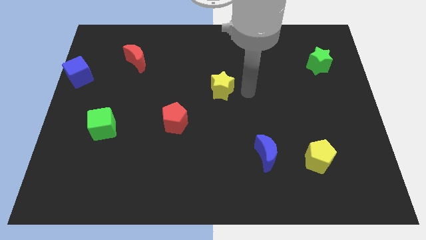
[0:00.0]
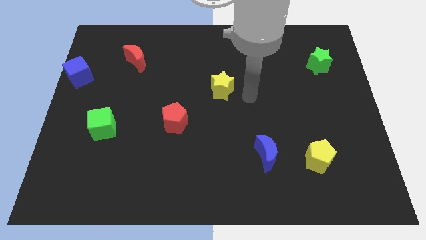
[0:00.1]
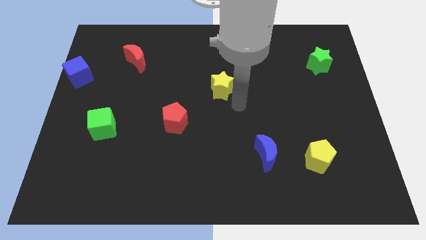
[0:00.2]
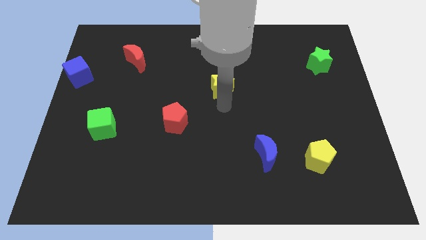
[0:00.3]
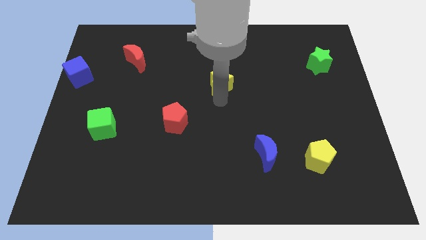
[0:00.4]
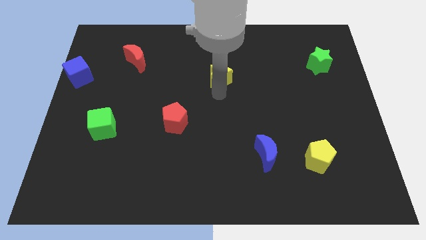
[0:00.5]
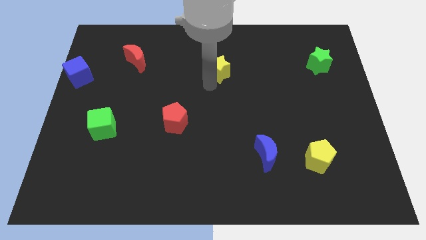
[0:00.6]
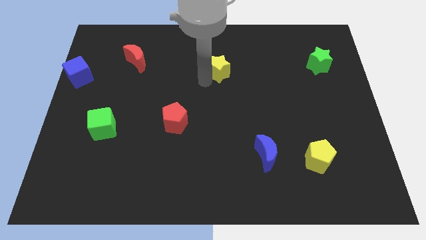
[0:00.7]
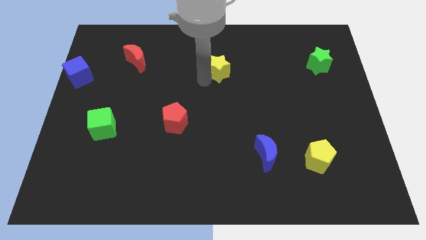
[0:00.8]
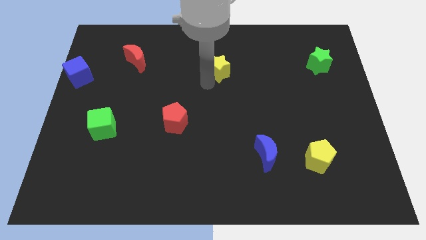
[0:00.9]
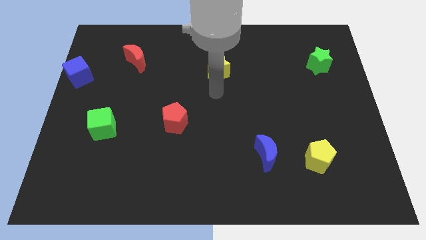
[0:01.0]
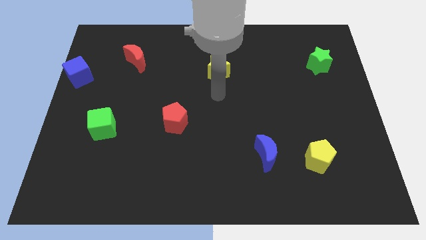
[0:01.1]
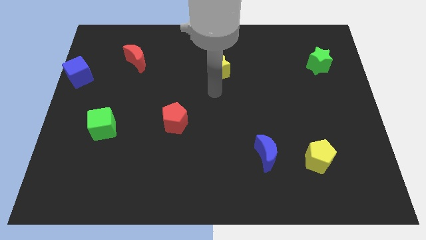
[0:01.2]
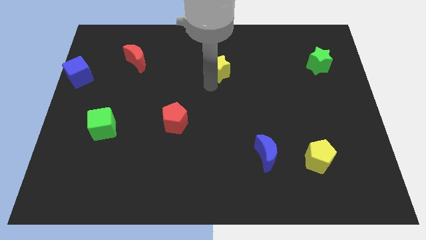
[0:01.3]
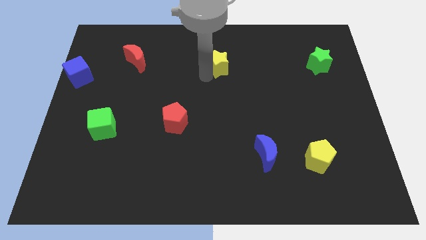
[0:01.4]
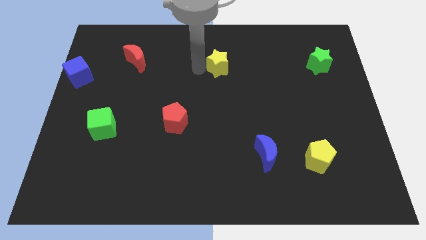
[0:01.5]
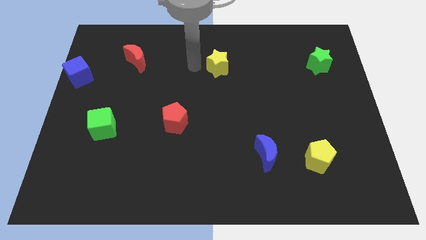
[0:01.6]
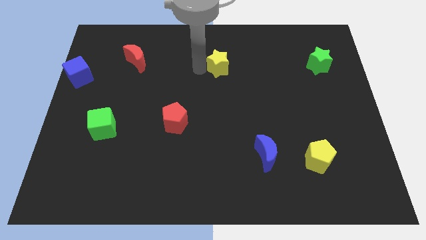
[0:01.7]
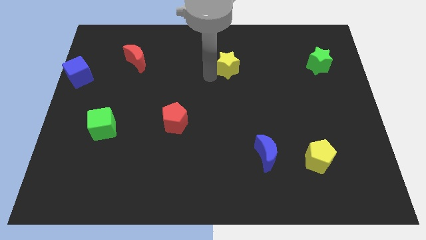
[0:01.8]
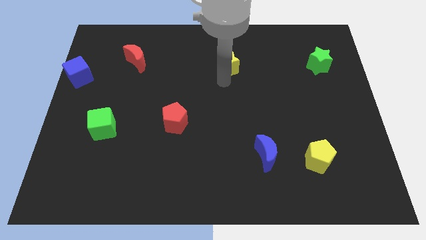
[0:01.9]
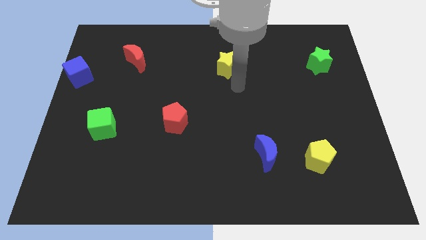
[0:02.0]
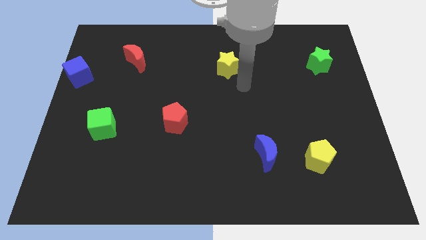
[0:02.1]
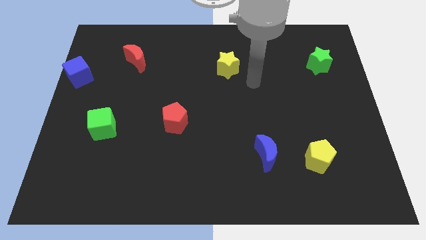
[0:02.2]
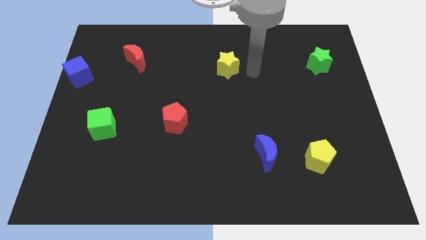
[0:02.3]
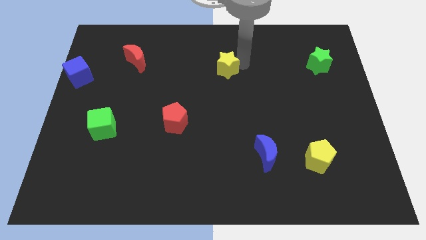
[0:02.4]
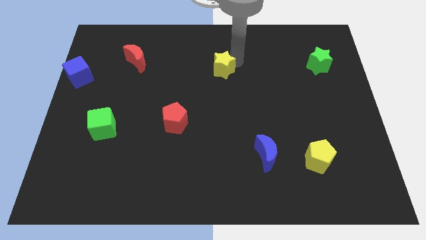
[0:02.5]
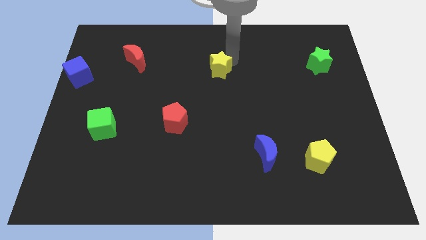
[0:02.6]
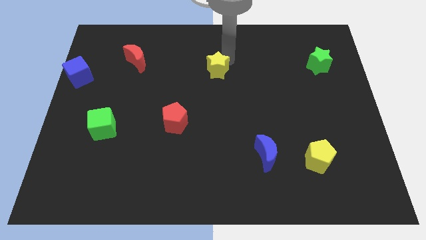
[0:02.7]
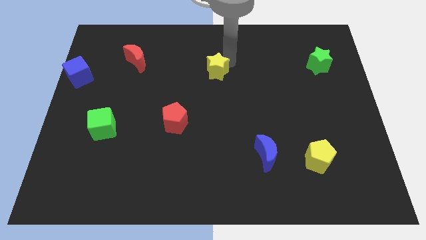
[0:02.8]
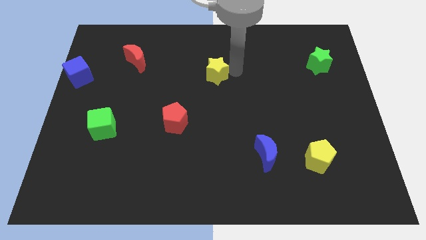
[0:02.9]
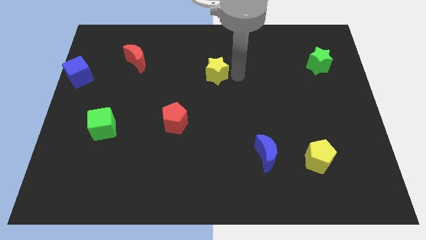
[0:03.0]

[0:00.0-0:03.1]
adjust yellow star to the center of the board

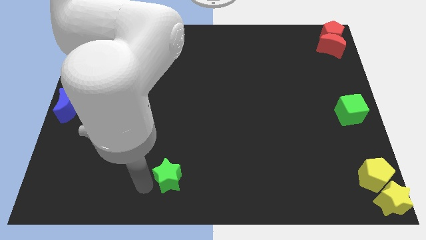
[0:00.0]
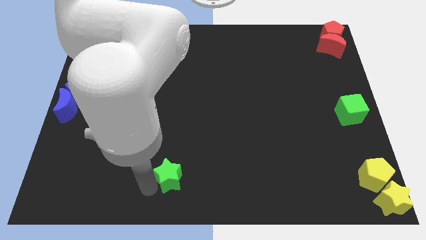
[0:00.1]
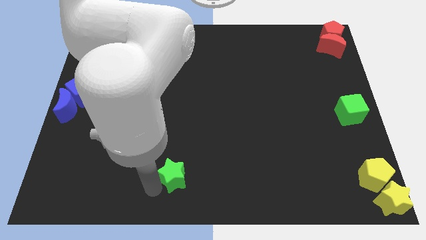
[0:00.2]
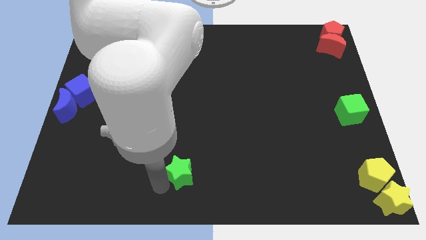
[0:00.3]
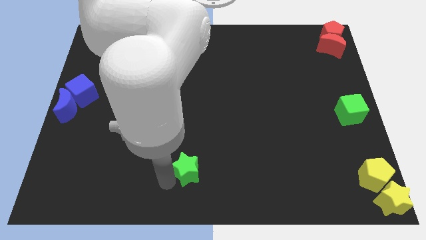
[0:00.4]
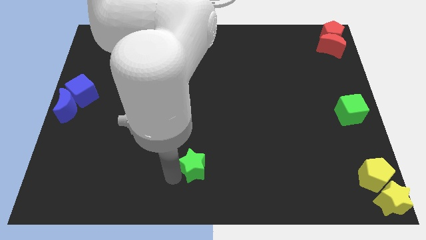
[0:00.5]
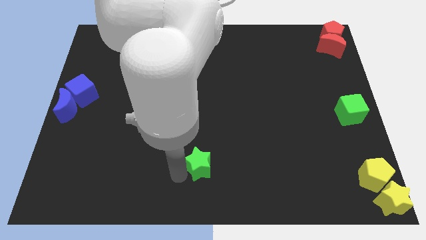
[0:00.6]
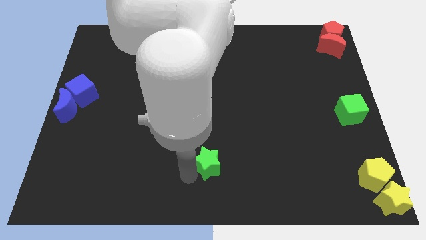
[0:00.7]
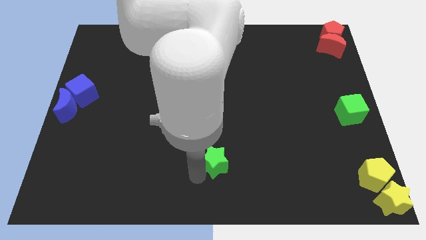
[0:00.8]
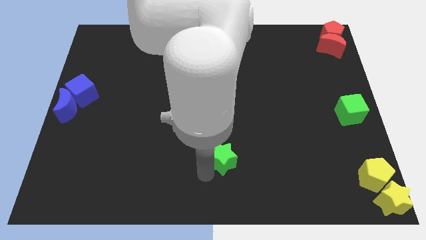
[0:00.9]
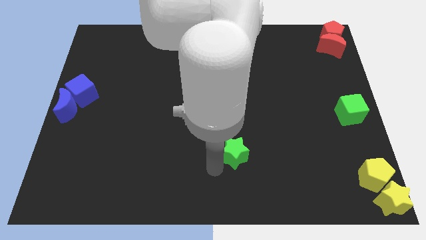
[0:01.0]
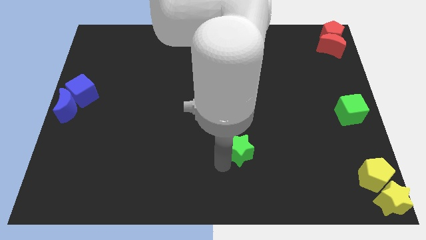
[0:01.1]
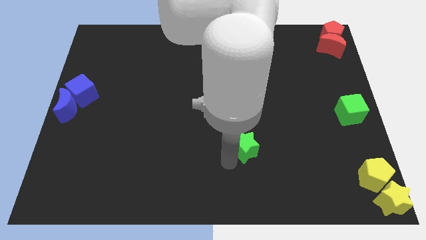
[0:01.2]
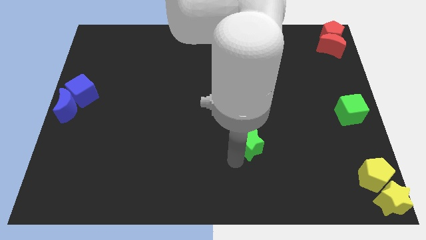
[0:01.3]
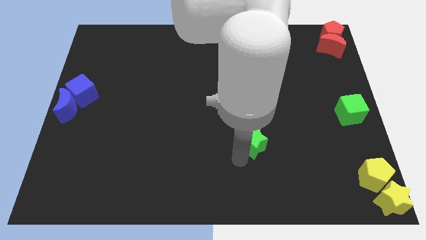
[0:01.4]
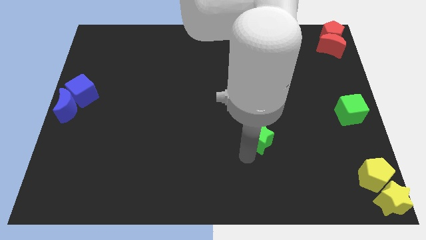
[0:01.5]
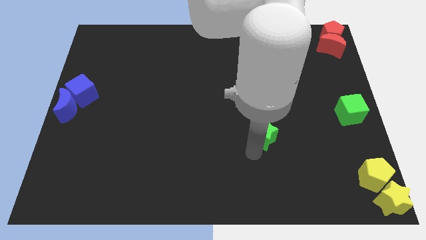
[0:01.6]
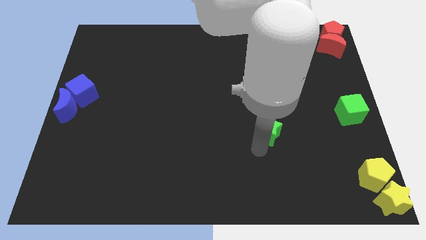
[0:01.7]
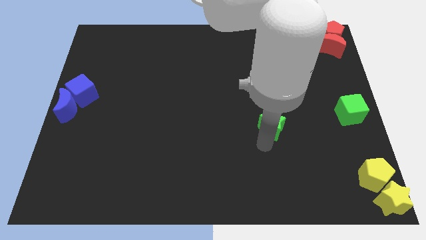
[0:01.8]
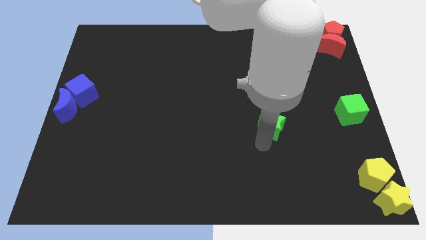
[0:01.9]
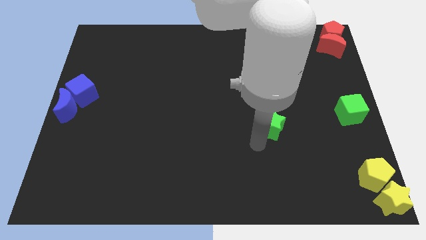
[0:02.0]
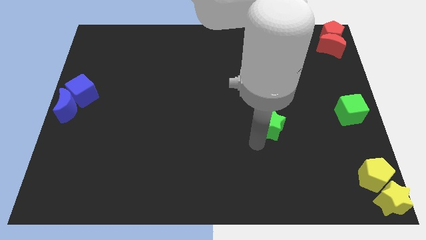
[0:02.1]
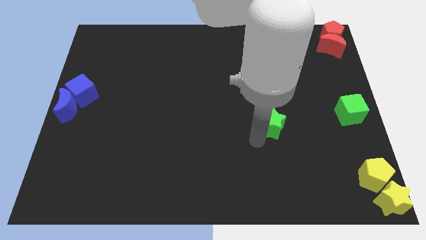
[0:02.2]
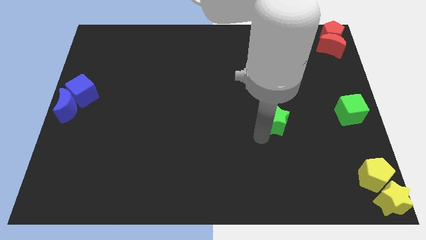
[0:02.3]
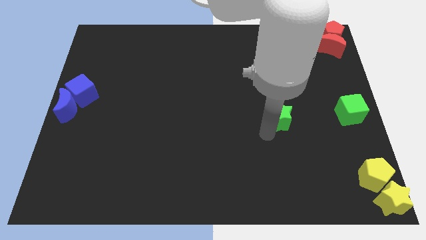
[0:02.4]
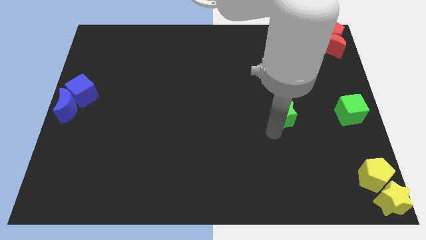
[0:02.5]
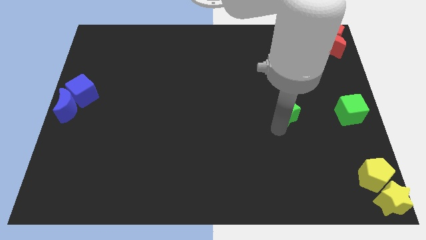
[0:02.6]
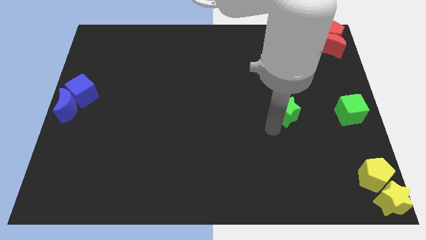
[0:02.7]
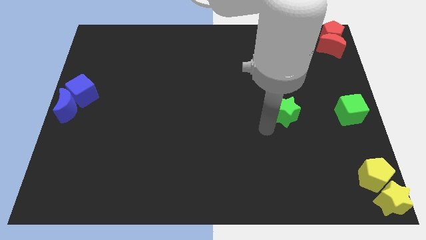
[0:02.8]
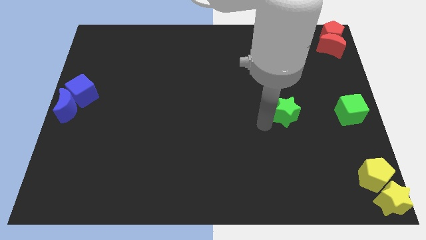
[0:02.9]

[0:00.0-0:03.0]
place the green star parallel to green cube

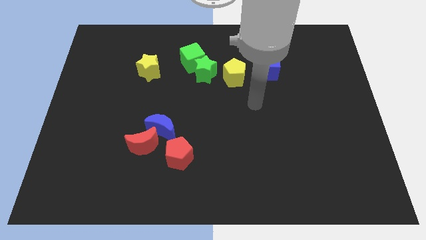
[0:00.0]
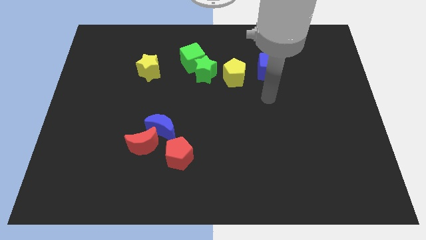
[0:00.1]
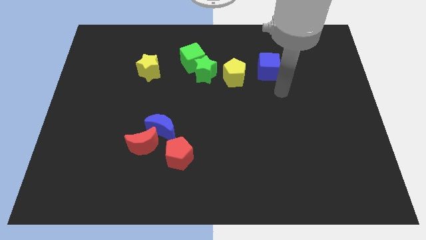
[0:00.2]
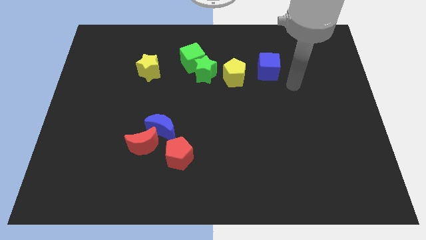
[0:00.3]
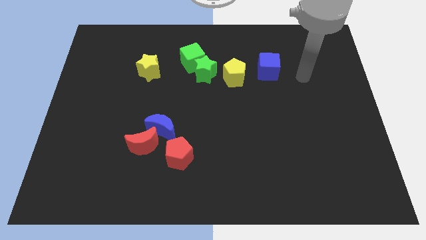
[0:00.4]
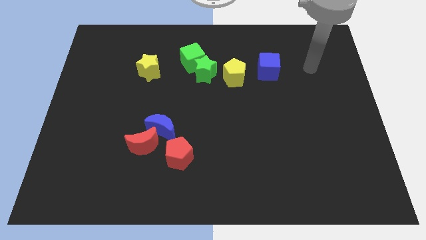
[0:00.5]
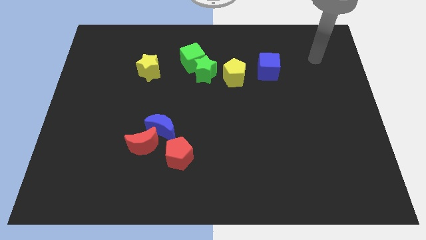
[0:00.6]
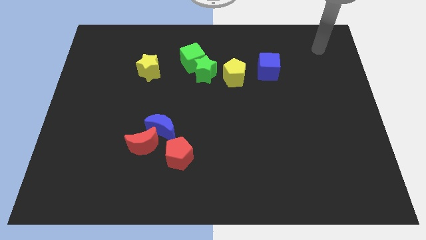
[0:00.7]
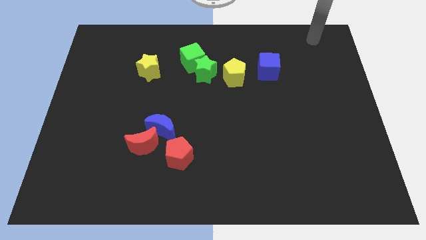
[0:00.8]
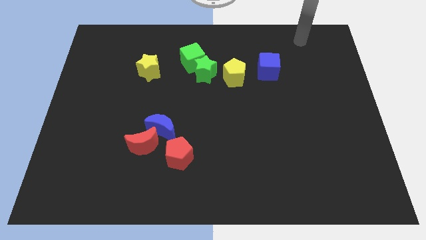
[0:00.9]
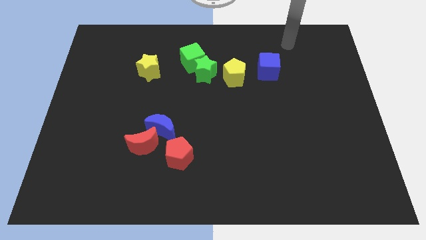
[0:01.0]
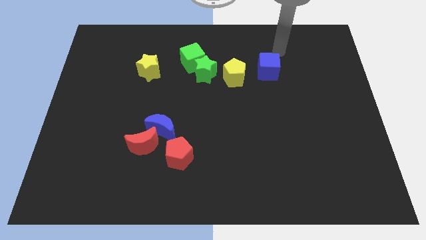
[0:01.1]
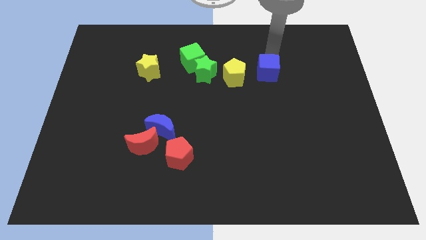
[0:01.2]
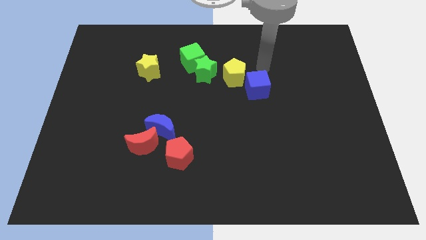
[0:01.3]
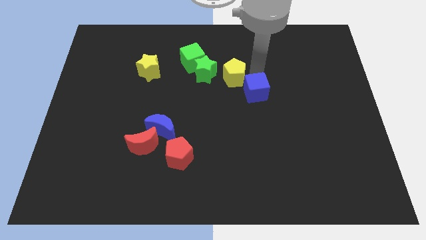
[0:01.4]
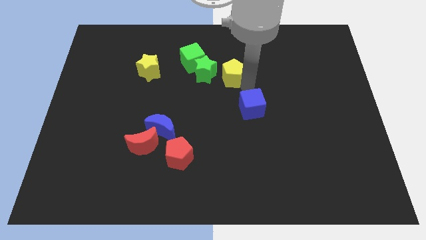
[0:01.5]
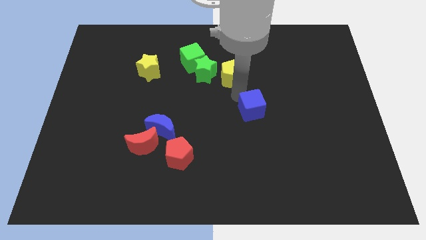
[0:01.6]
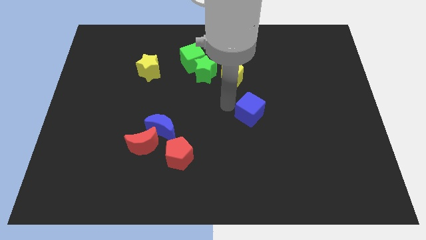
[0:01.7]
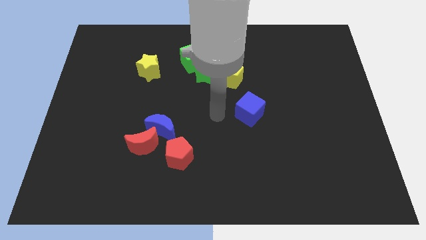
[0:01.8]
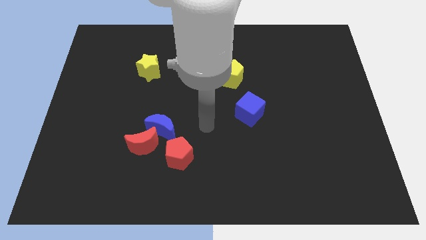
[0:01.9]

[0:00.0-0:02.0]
move the blue cube towards center

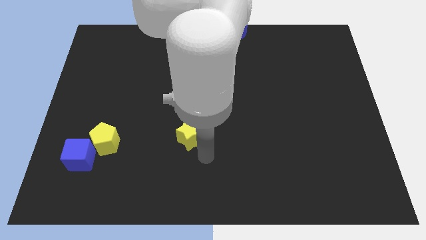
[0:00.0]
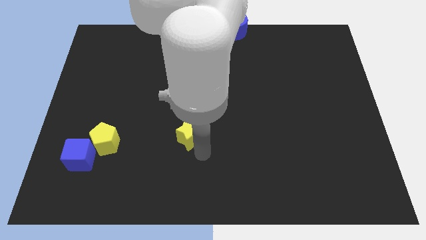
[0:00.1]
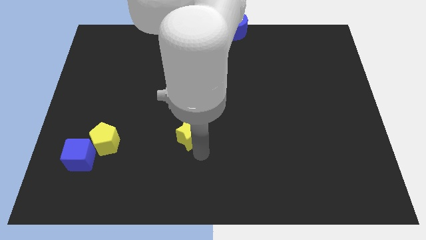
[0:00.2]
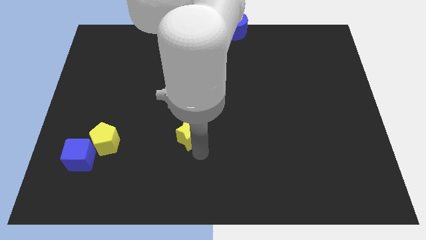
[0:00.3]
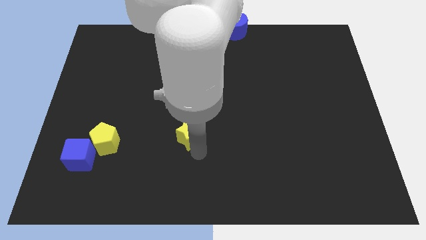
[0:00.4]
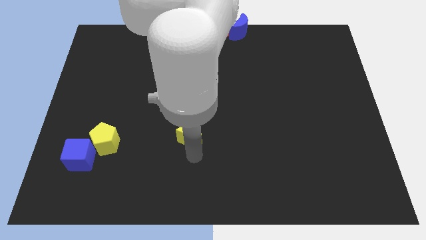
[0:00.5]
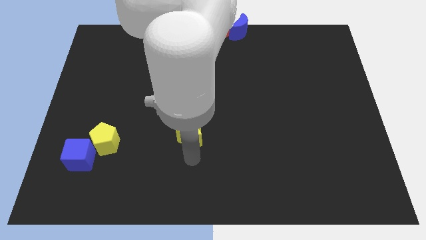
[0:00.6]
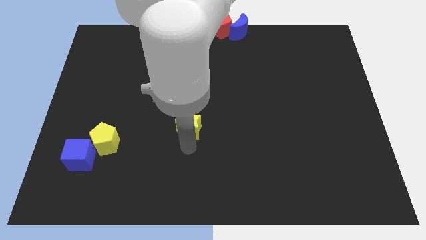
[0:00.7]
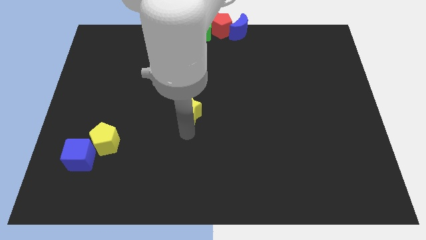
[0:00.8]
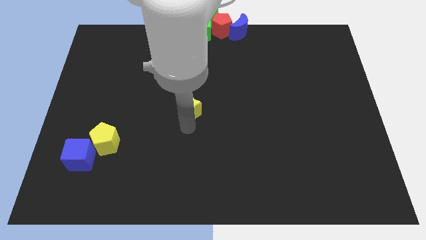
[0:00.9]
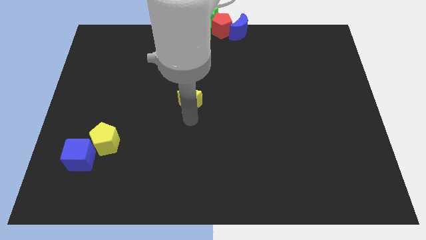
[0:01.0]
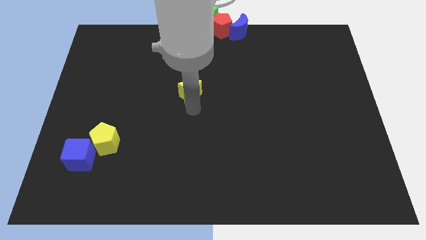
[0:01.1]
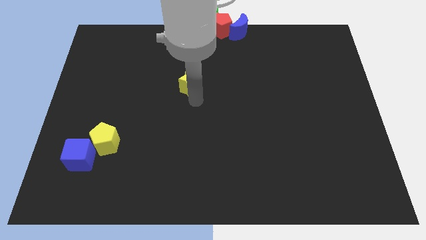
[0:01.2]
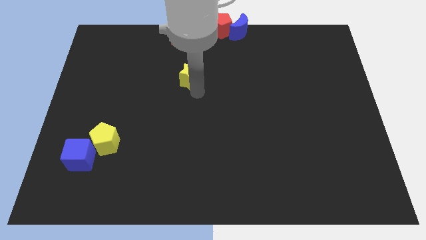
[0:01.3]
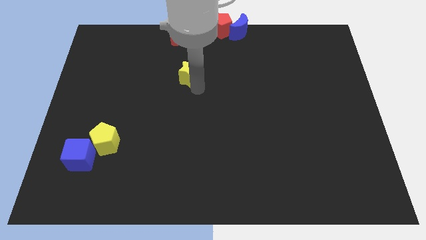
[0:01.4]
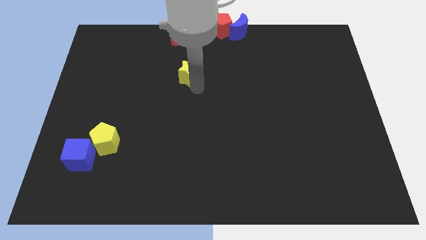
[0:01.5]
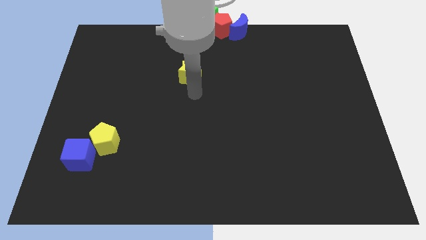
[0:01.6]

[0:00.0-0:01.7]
drag the yellow star towards the group of blocks
